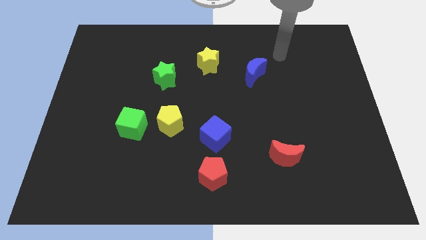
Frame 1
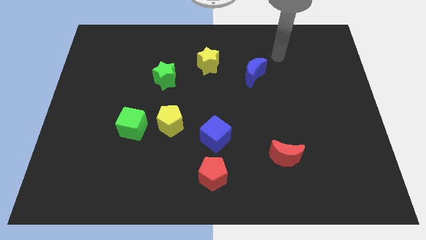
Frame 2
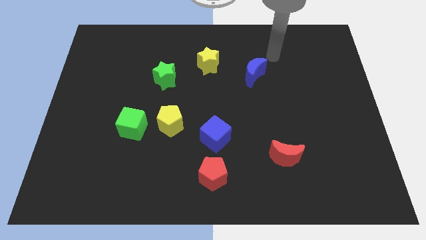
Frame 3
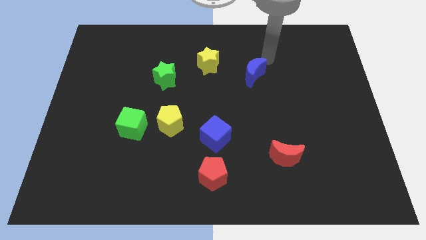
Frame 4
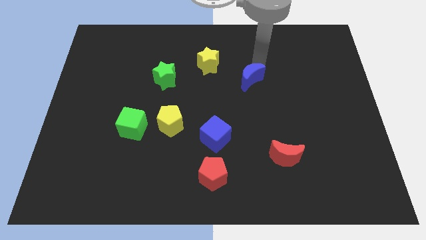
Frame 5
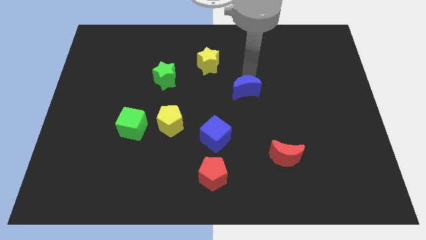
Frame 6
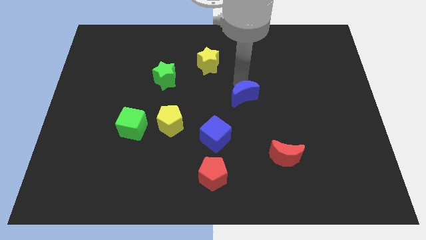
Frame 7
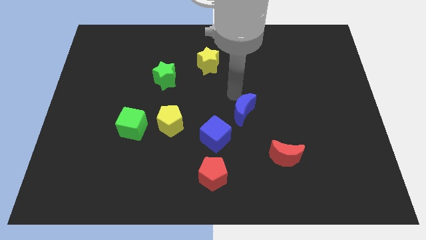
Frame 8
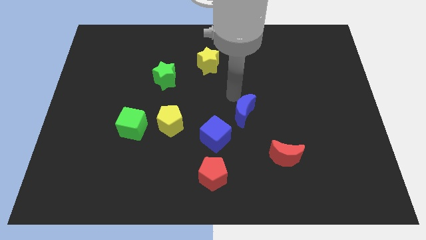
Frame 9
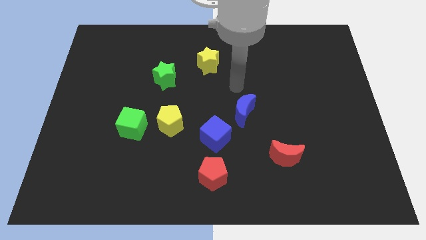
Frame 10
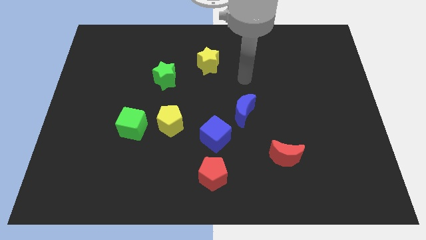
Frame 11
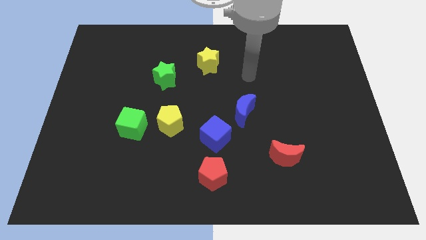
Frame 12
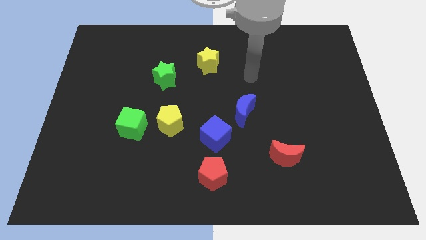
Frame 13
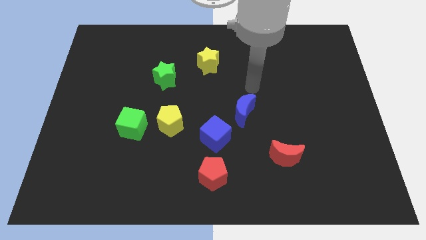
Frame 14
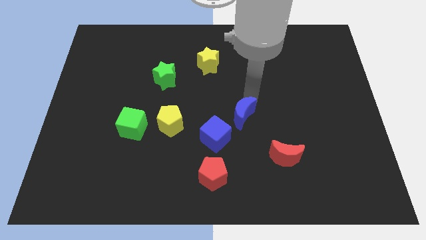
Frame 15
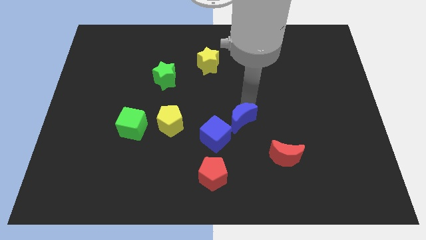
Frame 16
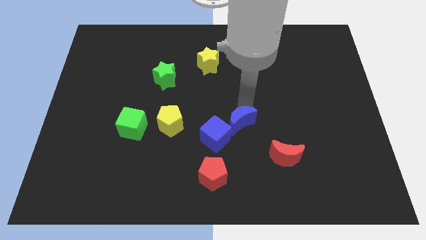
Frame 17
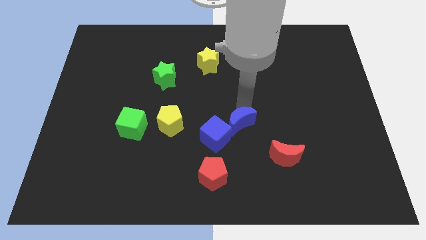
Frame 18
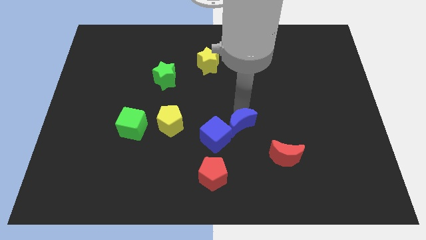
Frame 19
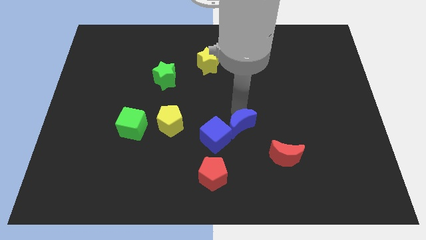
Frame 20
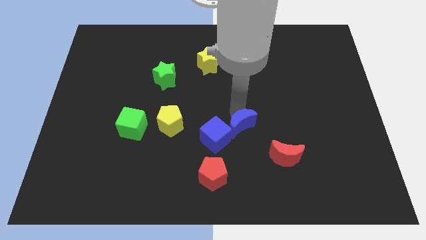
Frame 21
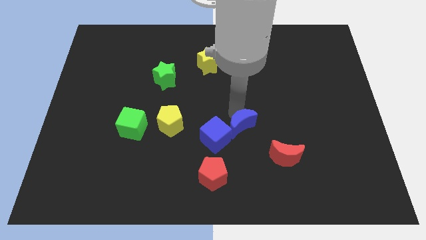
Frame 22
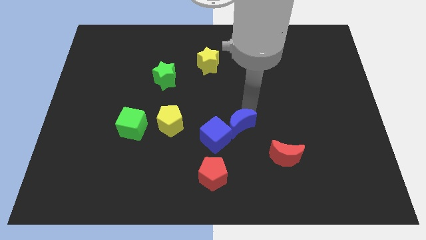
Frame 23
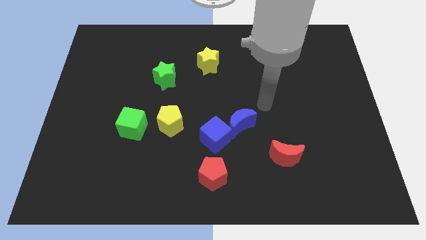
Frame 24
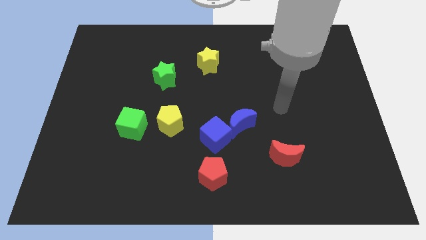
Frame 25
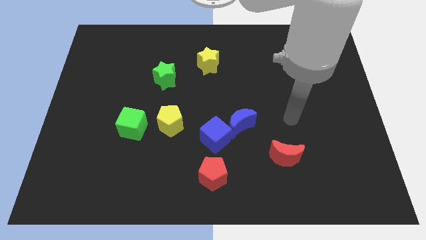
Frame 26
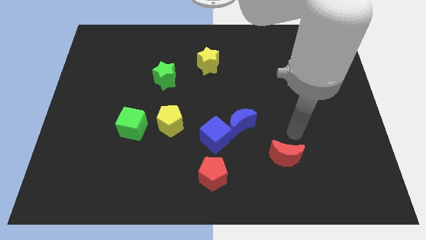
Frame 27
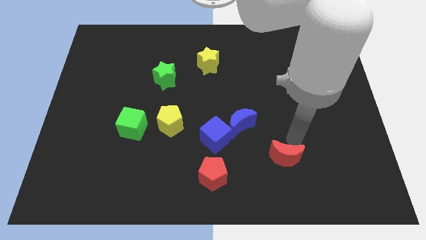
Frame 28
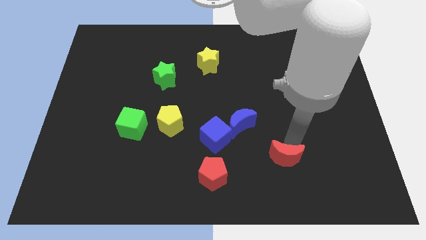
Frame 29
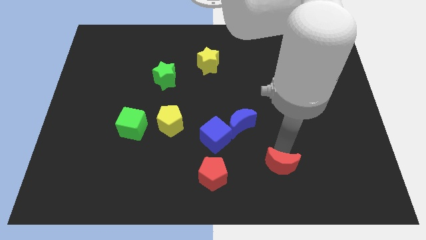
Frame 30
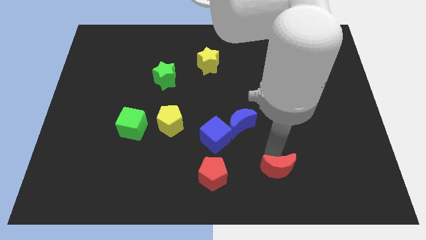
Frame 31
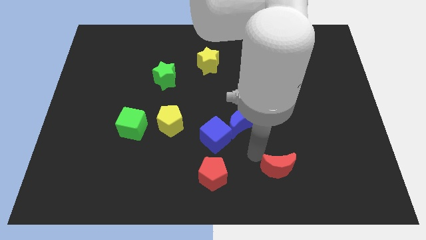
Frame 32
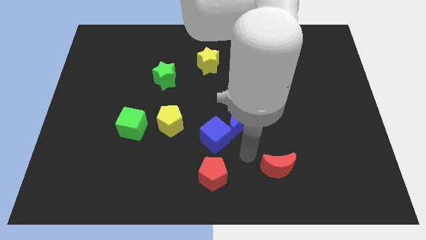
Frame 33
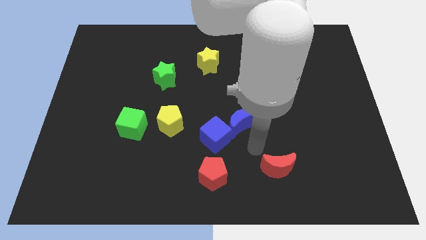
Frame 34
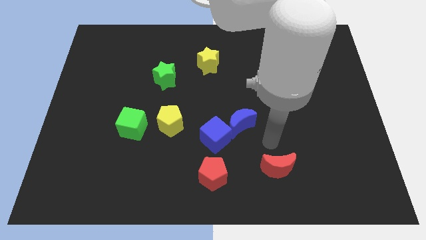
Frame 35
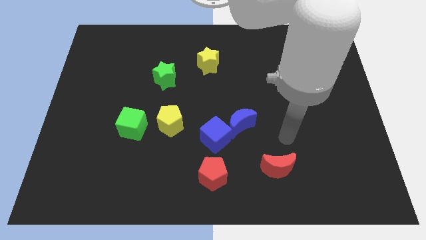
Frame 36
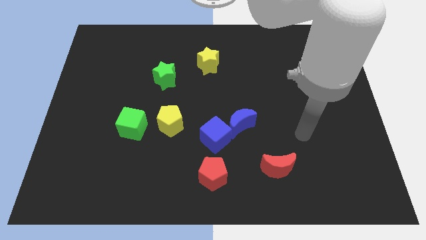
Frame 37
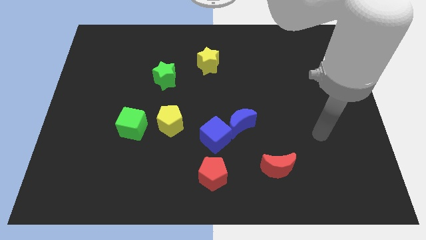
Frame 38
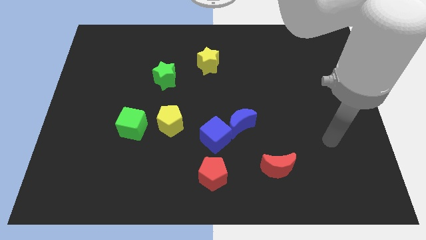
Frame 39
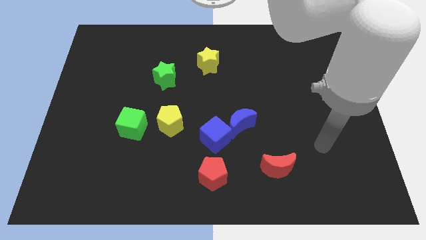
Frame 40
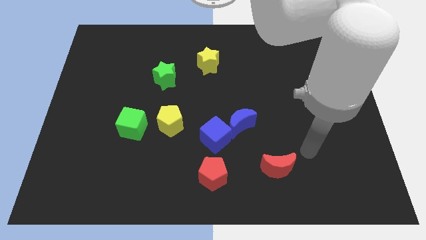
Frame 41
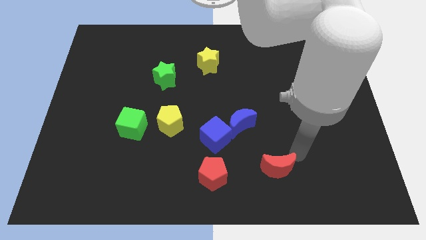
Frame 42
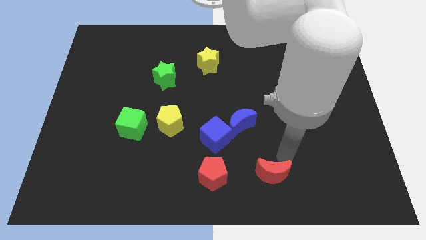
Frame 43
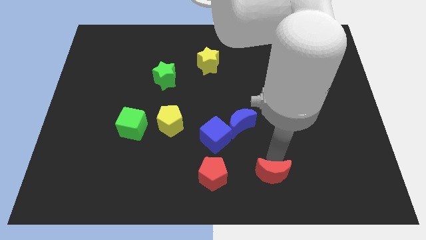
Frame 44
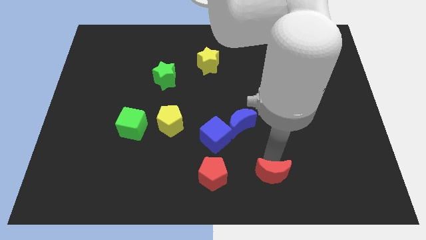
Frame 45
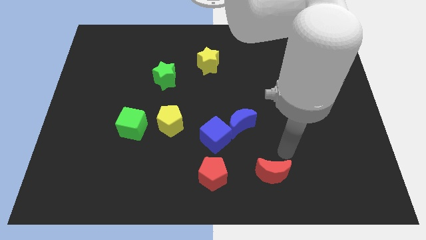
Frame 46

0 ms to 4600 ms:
move the red moon right to the red pentagon

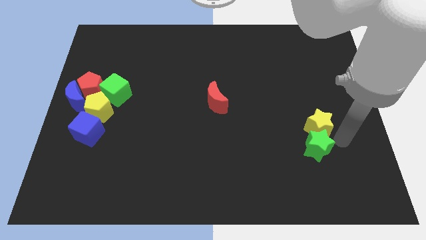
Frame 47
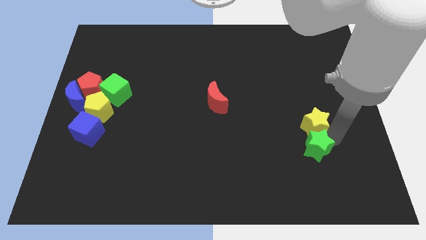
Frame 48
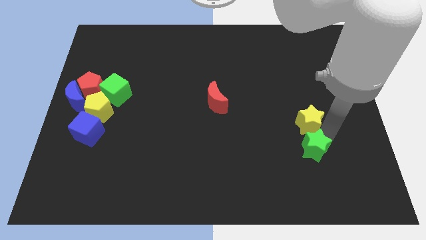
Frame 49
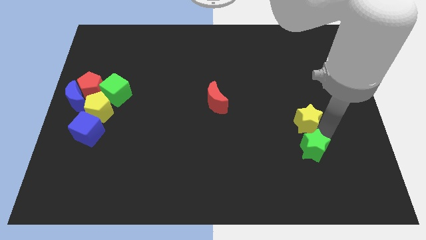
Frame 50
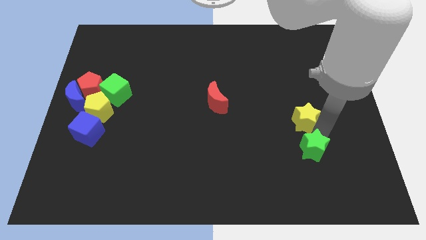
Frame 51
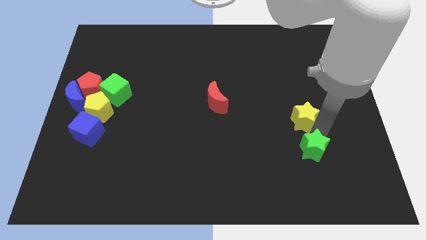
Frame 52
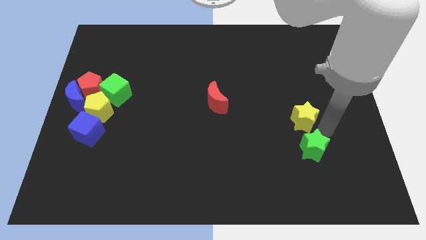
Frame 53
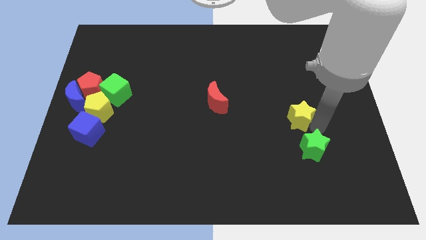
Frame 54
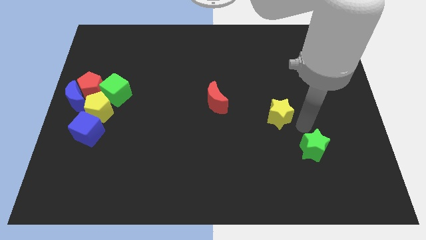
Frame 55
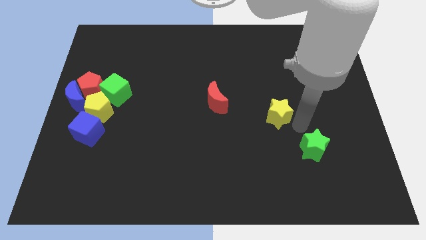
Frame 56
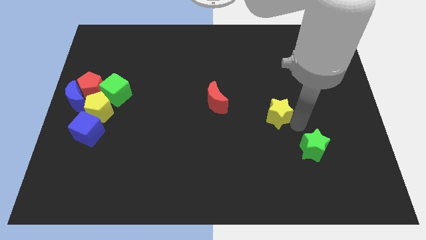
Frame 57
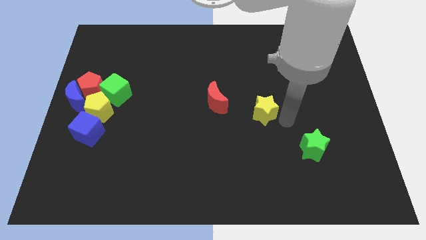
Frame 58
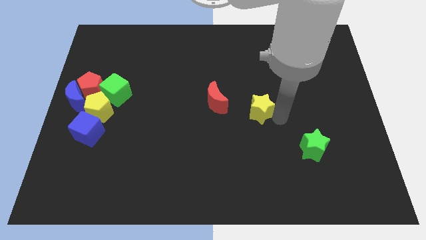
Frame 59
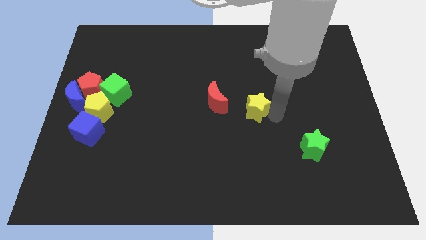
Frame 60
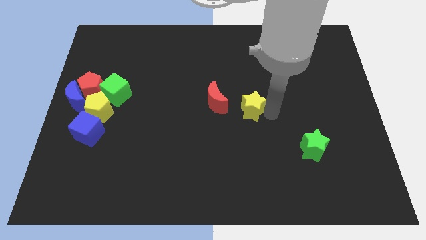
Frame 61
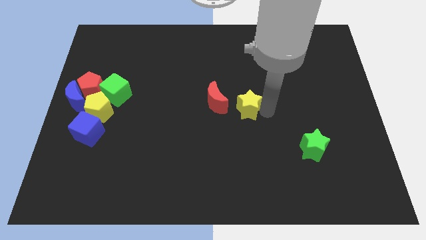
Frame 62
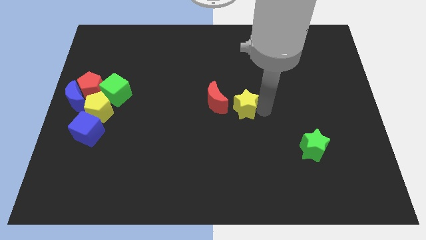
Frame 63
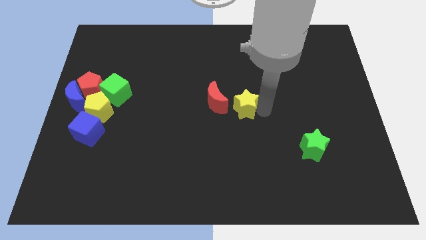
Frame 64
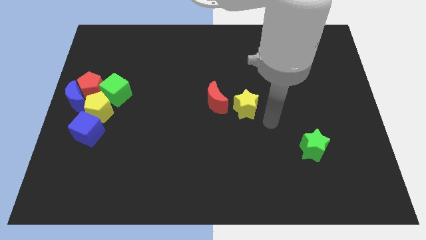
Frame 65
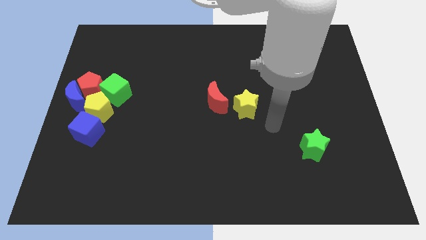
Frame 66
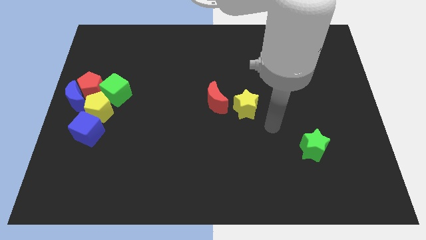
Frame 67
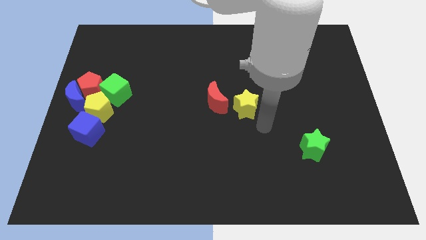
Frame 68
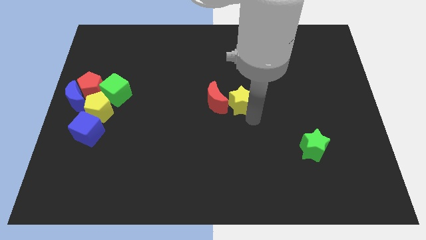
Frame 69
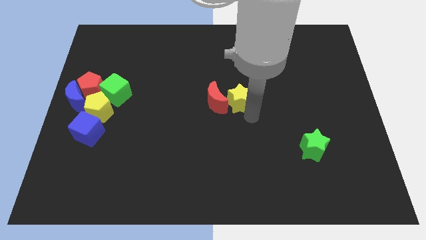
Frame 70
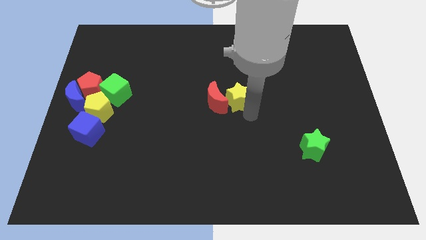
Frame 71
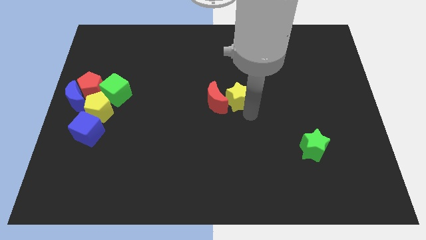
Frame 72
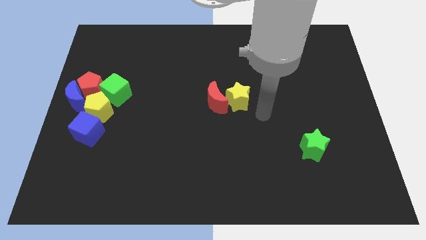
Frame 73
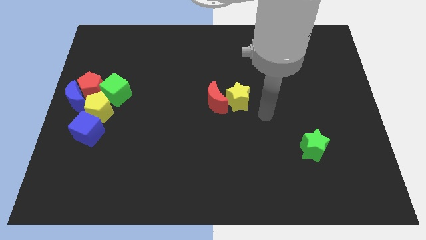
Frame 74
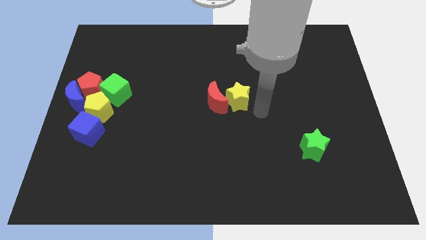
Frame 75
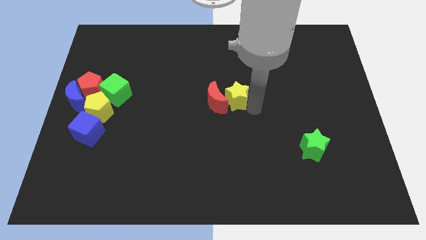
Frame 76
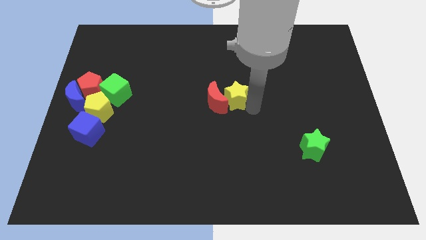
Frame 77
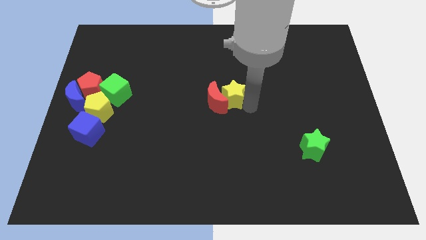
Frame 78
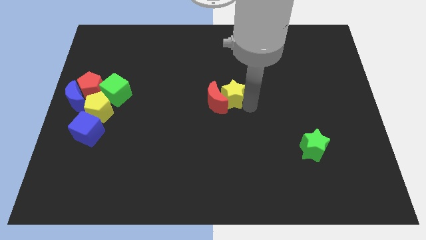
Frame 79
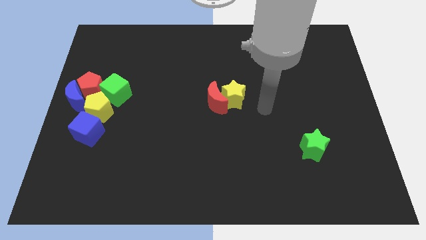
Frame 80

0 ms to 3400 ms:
push the yellow star into the red moon

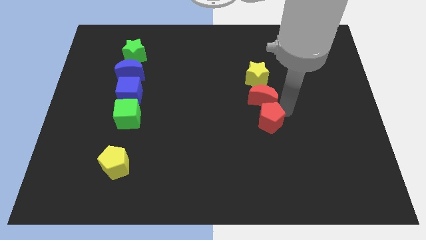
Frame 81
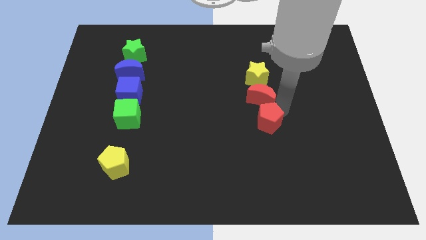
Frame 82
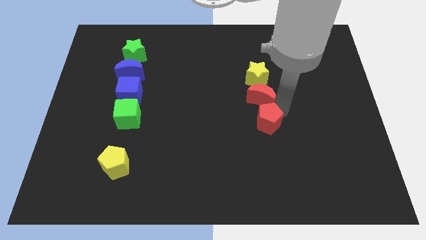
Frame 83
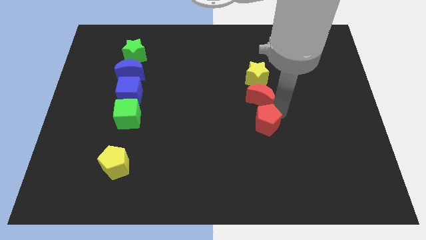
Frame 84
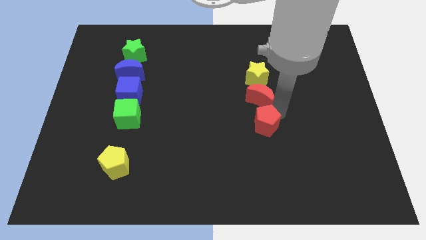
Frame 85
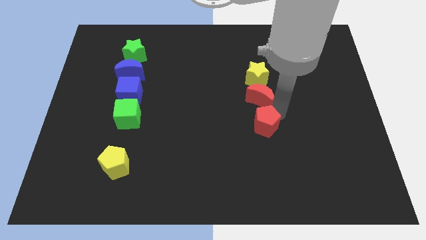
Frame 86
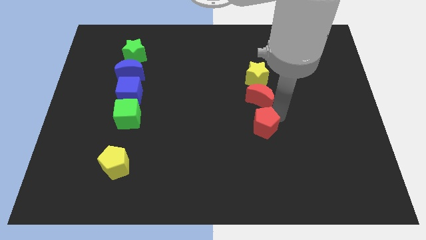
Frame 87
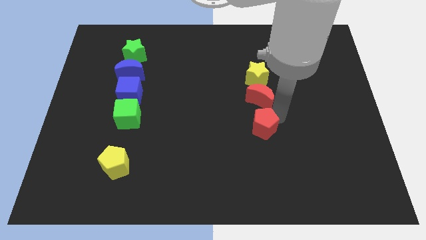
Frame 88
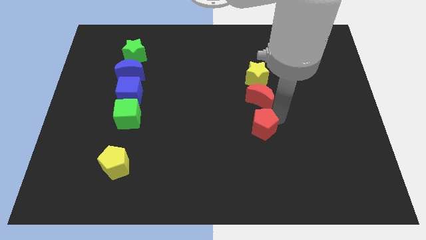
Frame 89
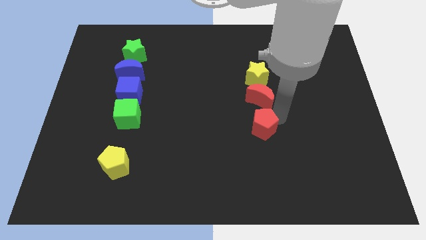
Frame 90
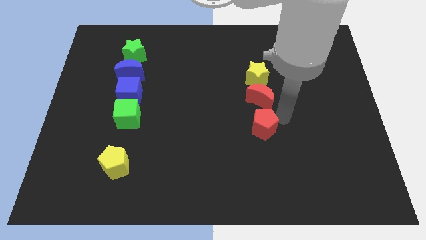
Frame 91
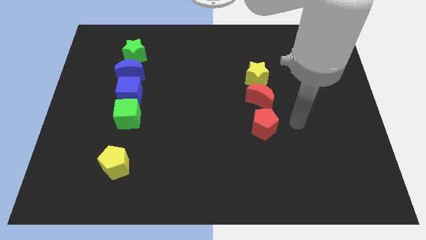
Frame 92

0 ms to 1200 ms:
arrange red pentagon red crescent and yellow star in a vertical line
